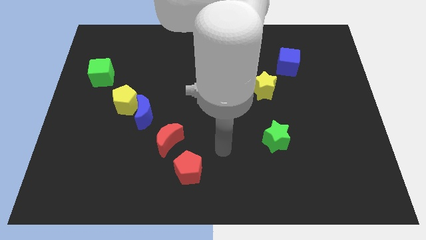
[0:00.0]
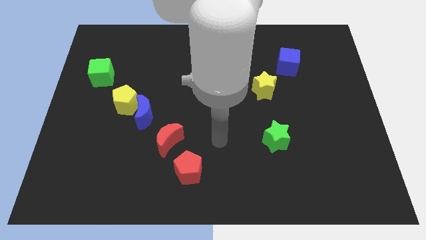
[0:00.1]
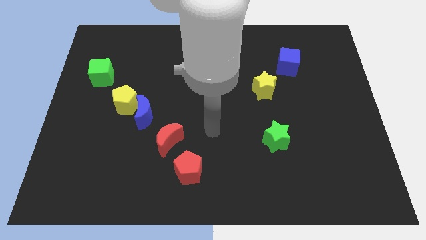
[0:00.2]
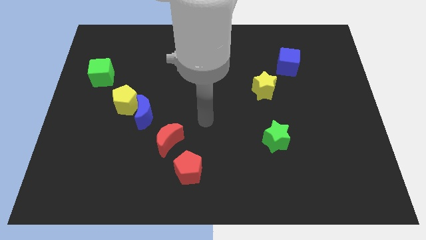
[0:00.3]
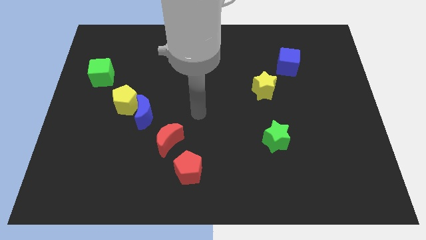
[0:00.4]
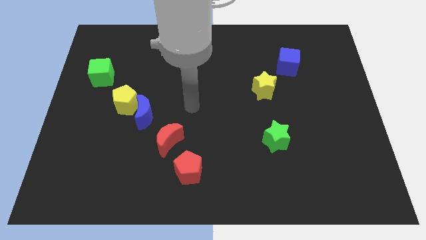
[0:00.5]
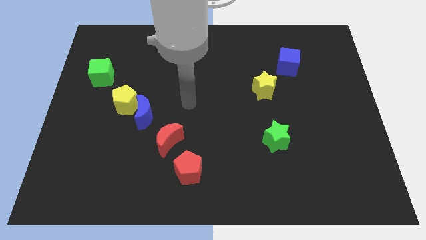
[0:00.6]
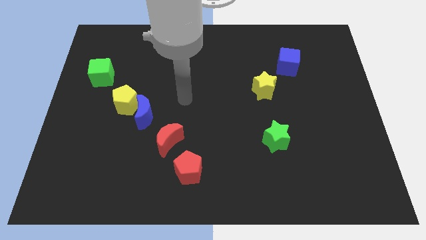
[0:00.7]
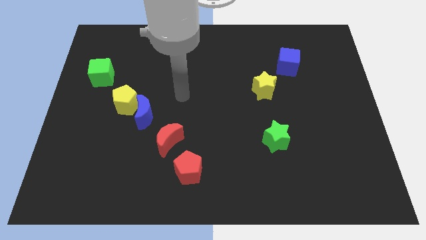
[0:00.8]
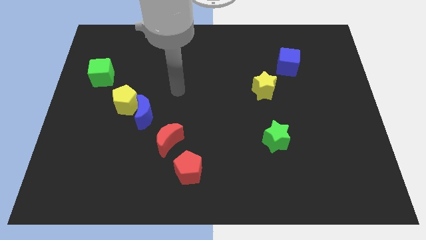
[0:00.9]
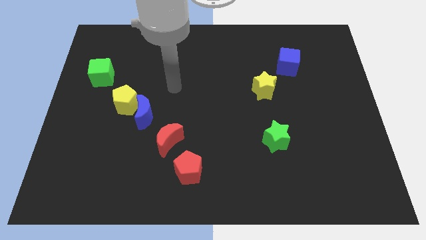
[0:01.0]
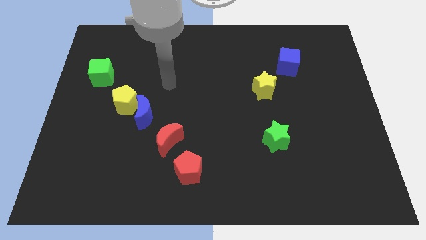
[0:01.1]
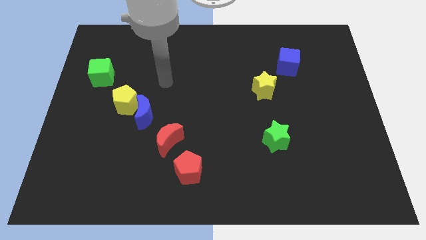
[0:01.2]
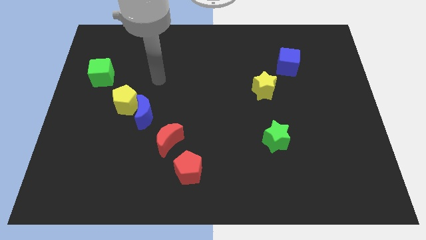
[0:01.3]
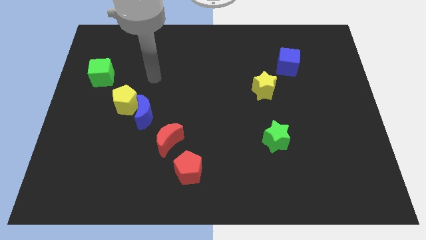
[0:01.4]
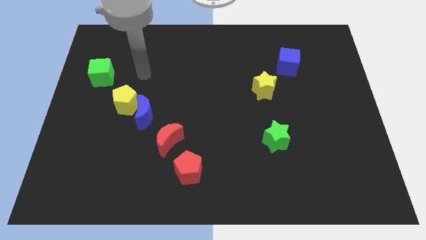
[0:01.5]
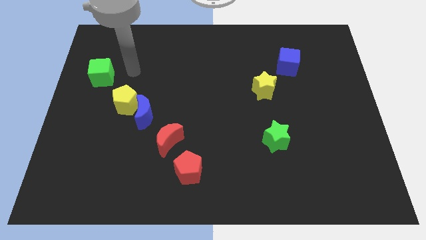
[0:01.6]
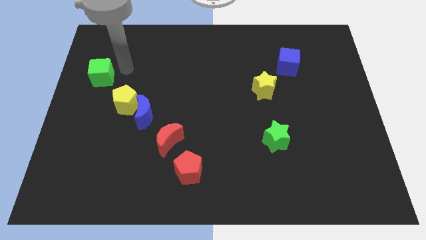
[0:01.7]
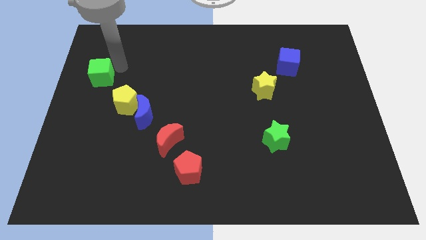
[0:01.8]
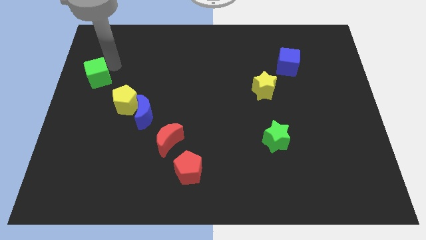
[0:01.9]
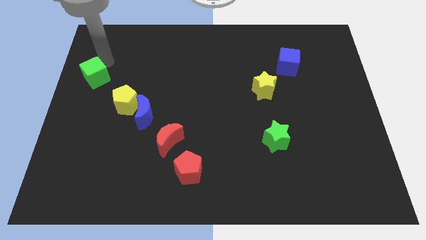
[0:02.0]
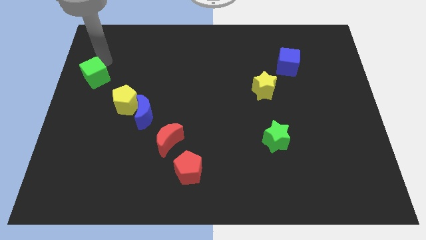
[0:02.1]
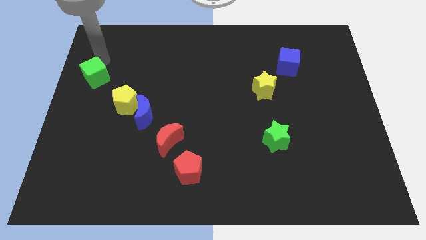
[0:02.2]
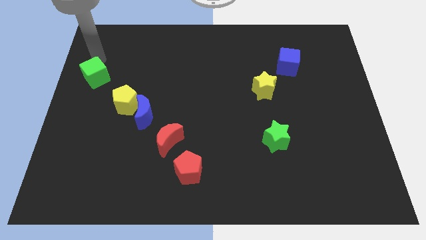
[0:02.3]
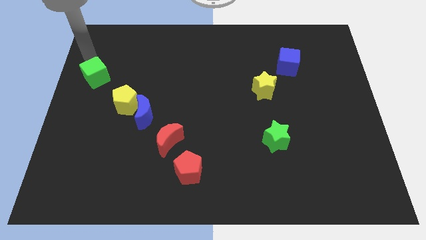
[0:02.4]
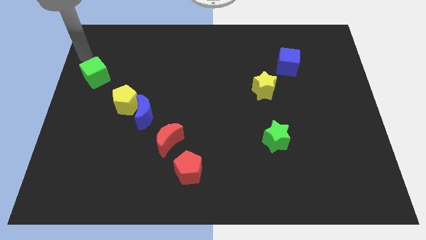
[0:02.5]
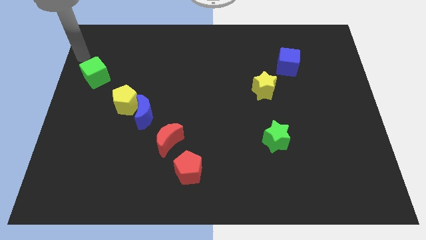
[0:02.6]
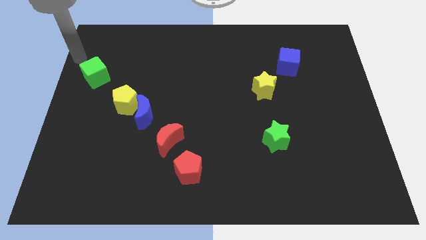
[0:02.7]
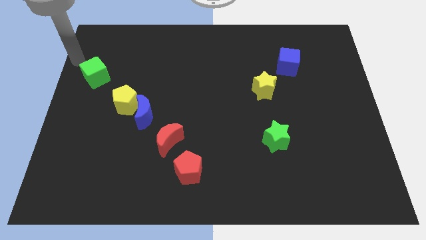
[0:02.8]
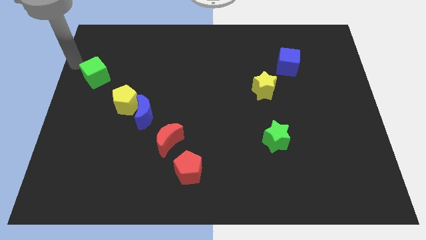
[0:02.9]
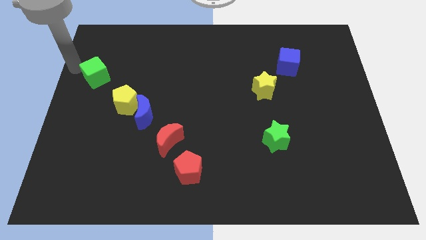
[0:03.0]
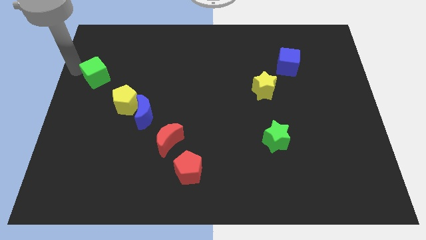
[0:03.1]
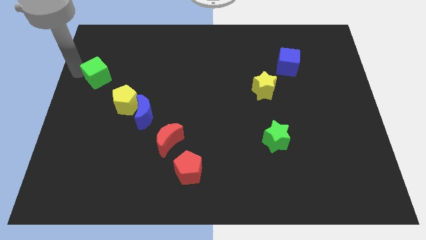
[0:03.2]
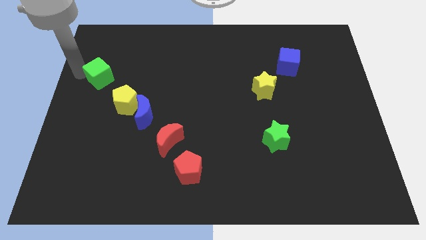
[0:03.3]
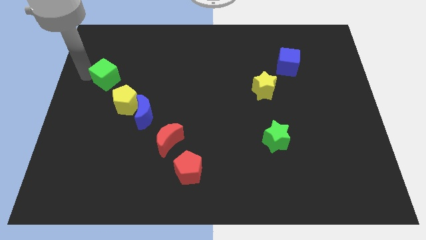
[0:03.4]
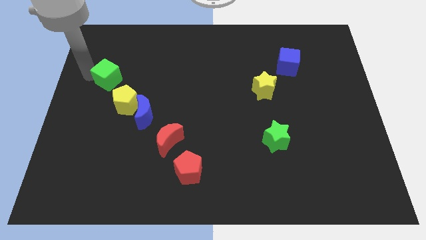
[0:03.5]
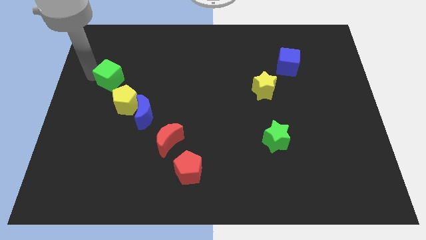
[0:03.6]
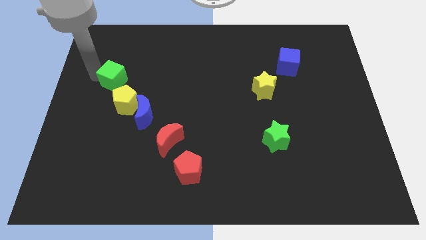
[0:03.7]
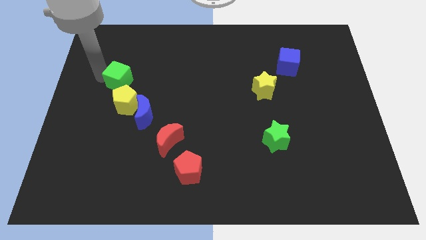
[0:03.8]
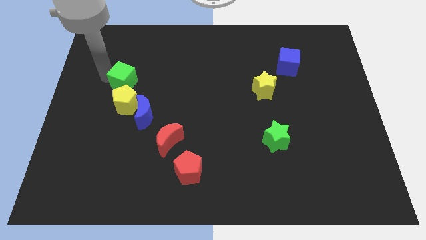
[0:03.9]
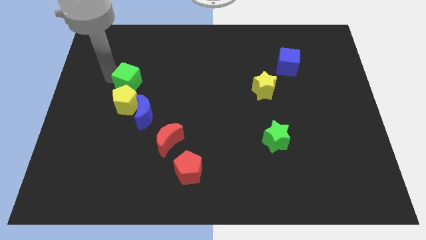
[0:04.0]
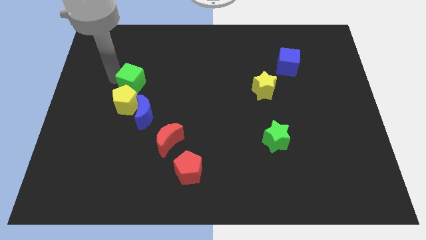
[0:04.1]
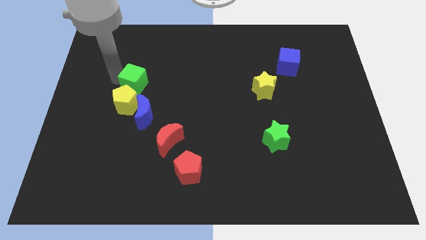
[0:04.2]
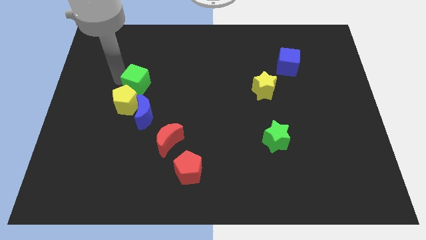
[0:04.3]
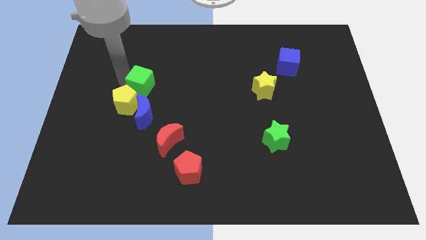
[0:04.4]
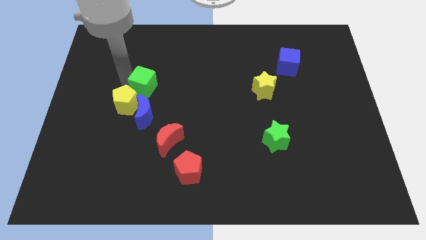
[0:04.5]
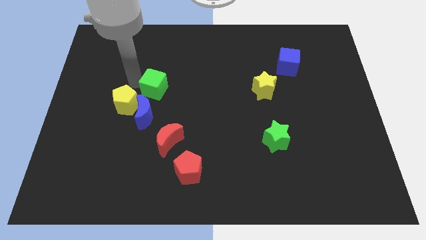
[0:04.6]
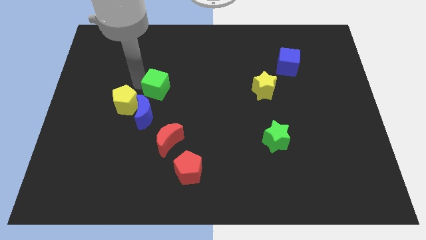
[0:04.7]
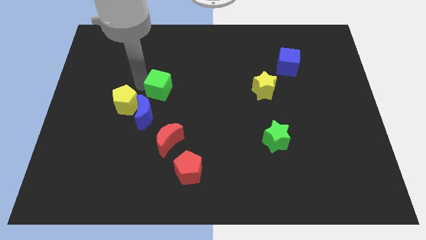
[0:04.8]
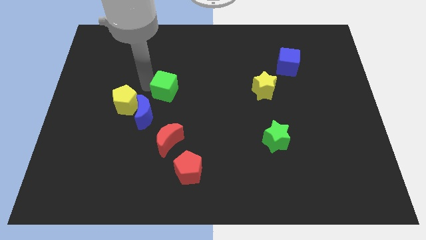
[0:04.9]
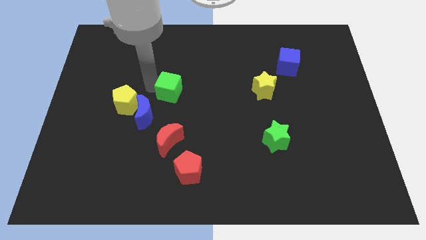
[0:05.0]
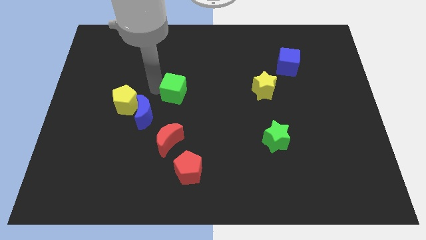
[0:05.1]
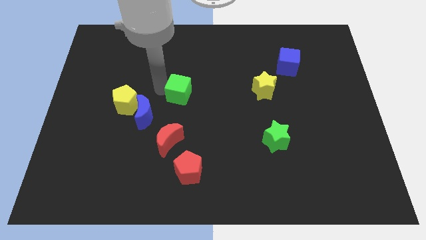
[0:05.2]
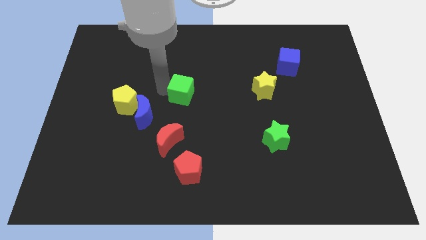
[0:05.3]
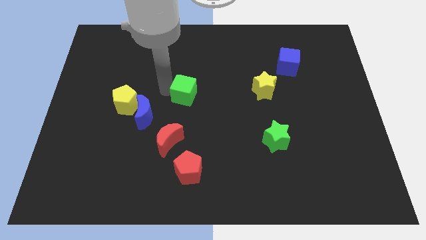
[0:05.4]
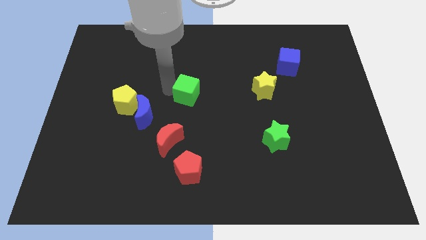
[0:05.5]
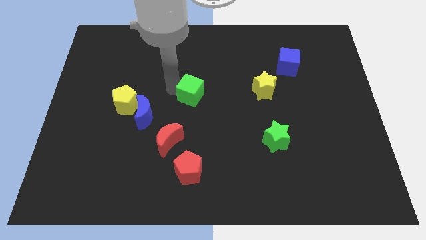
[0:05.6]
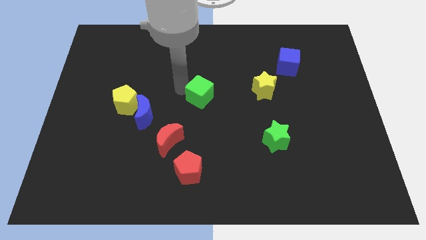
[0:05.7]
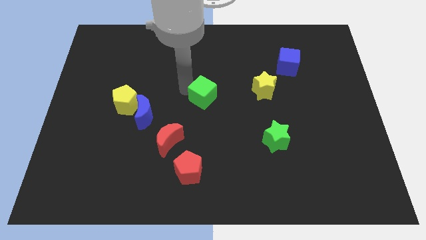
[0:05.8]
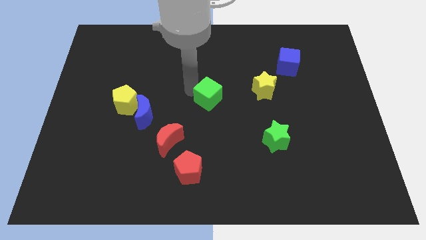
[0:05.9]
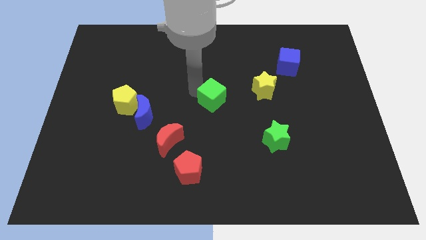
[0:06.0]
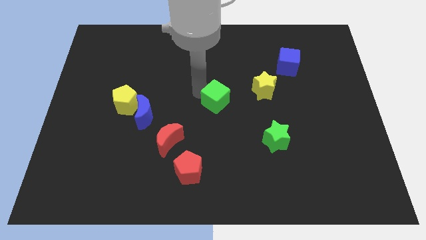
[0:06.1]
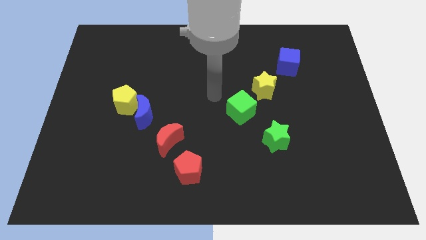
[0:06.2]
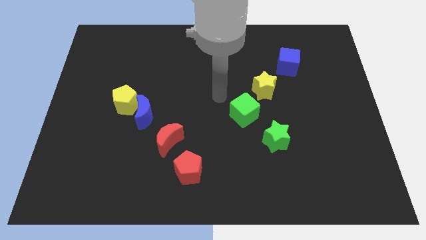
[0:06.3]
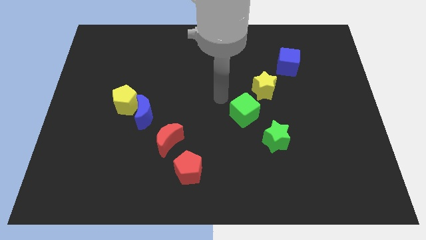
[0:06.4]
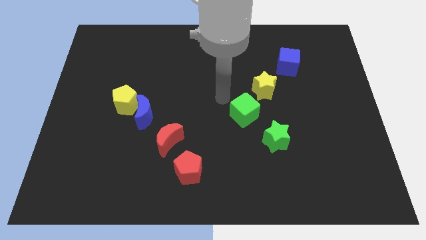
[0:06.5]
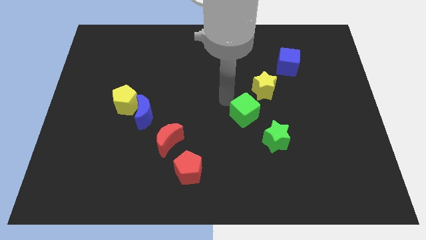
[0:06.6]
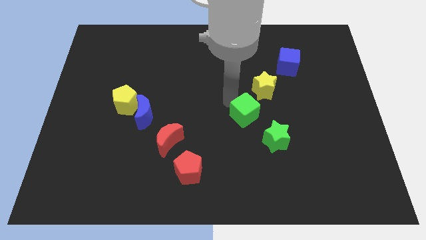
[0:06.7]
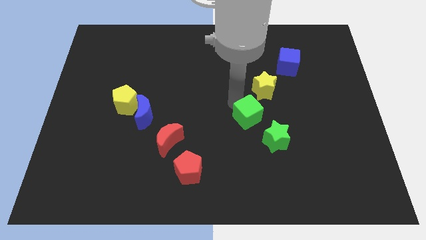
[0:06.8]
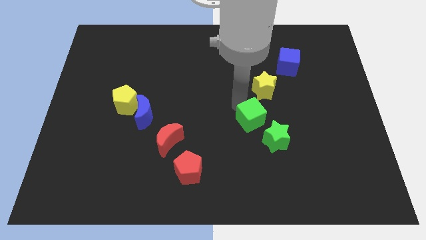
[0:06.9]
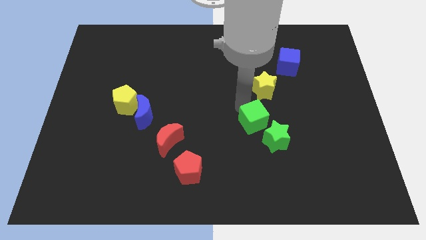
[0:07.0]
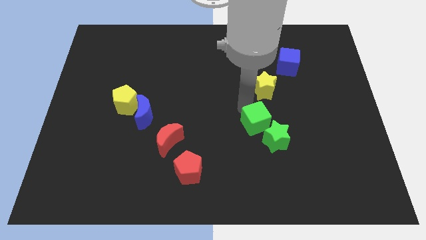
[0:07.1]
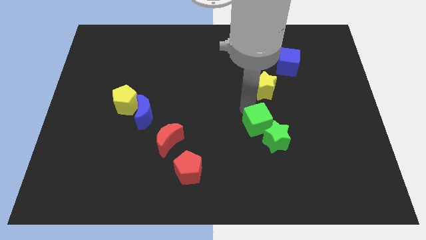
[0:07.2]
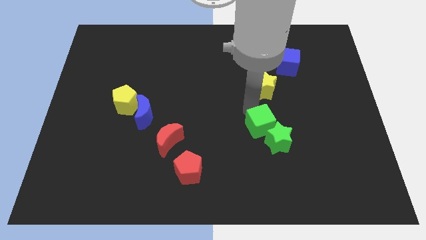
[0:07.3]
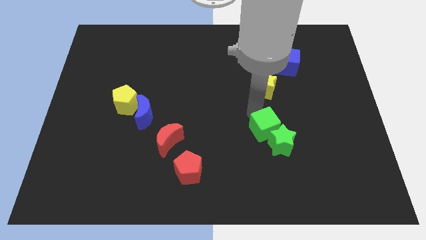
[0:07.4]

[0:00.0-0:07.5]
move the green cube next to the green star

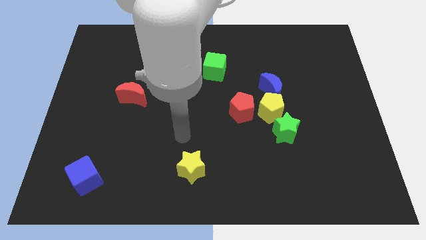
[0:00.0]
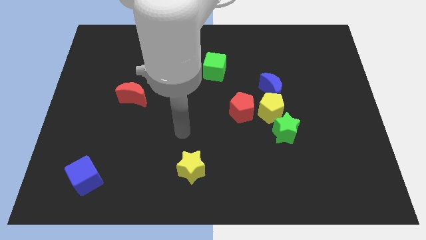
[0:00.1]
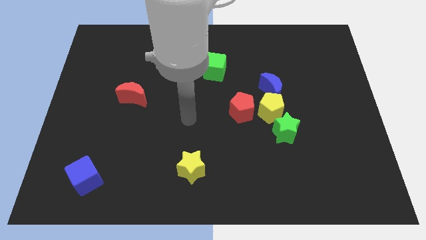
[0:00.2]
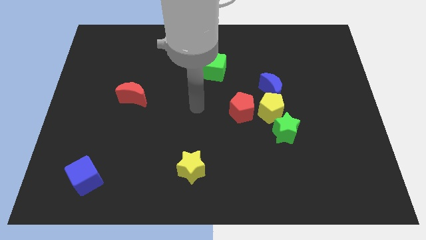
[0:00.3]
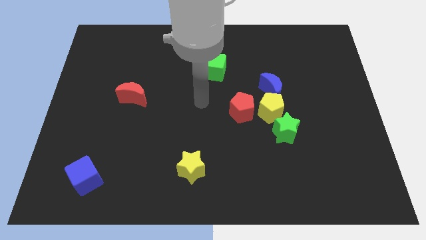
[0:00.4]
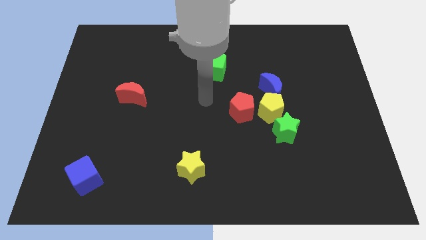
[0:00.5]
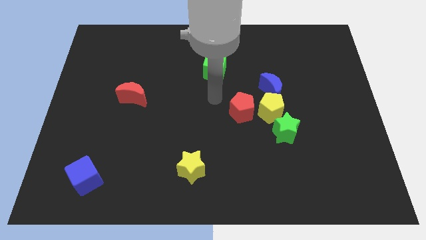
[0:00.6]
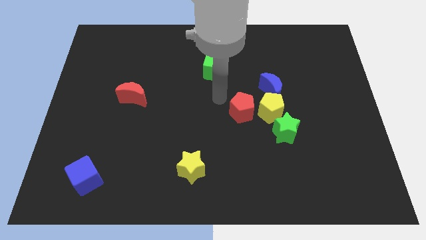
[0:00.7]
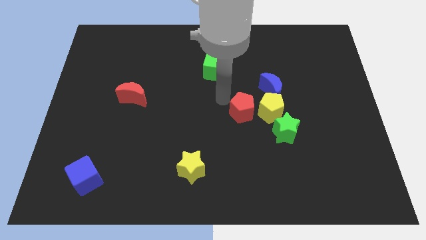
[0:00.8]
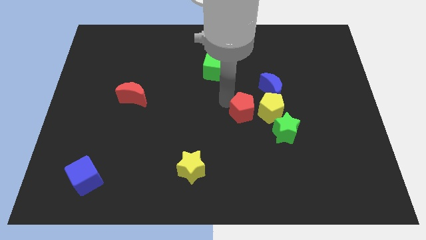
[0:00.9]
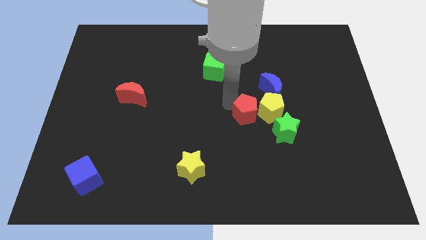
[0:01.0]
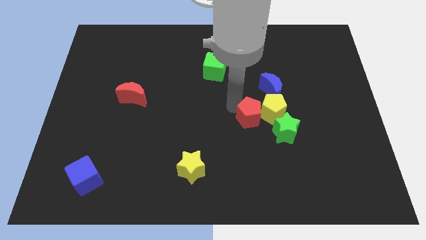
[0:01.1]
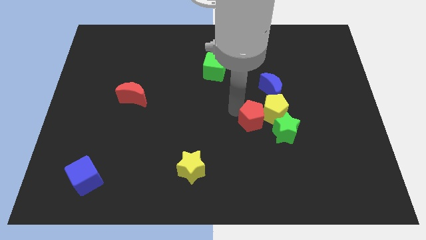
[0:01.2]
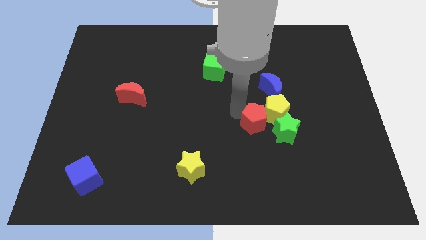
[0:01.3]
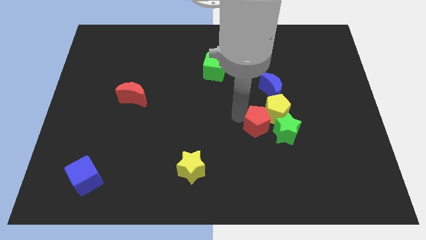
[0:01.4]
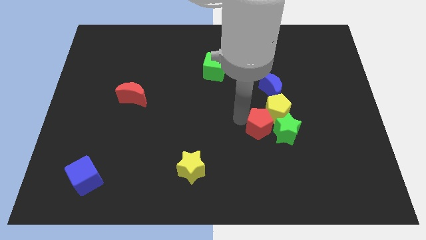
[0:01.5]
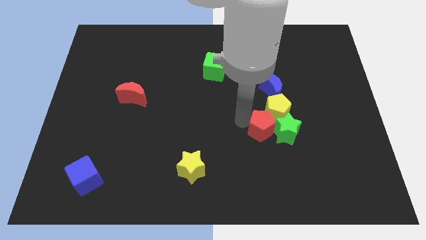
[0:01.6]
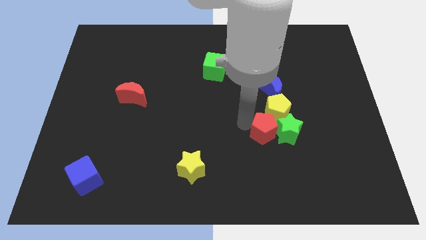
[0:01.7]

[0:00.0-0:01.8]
move the red pentagon next to the green star
